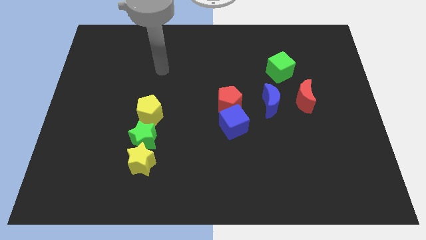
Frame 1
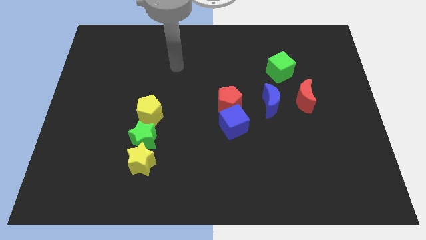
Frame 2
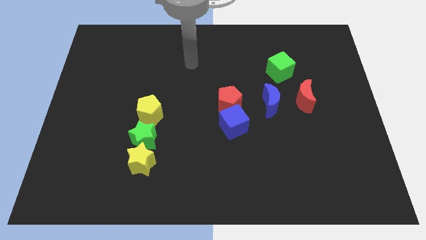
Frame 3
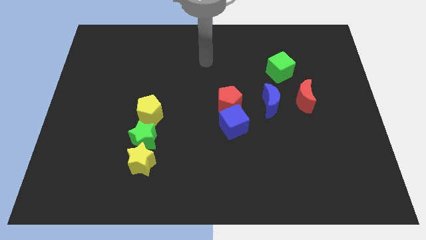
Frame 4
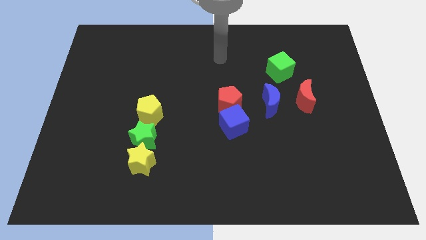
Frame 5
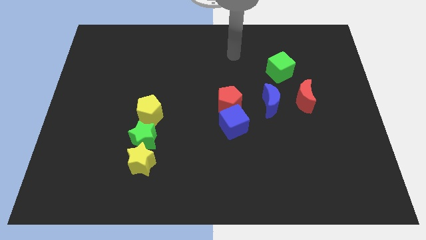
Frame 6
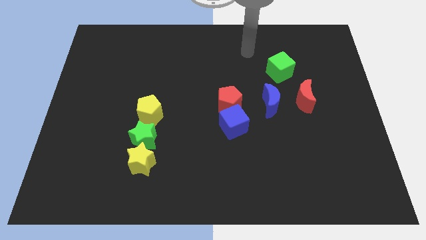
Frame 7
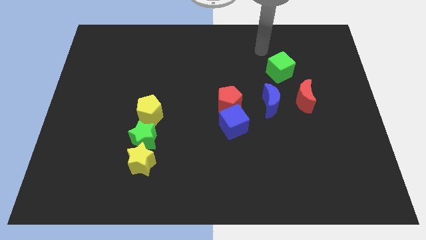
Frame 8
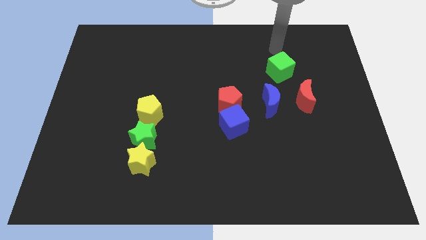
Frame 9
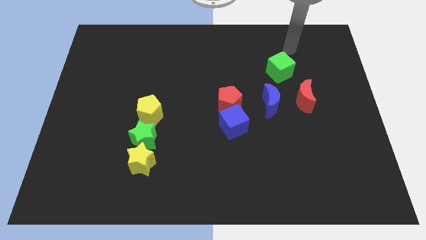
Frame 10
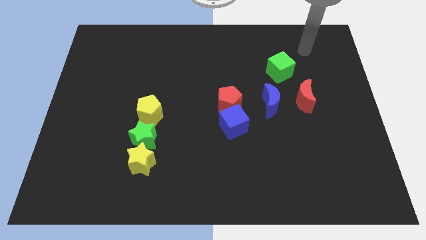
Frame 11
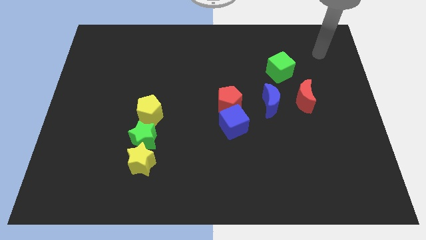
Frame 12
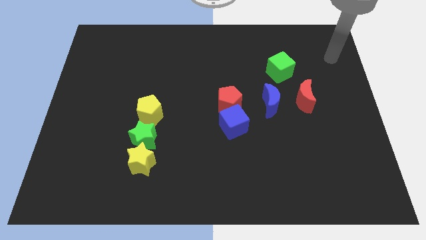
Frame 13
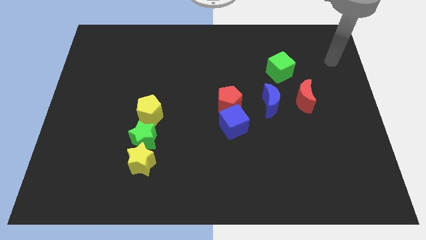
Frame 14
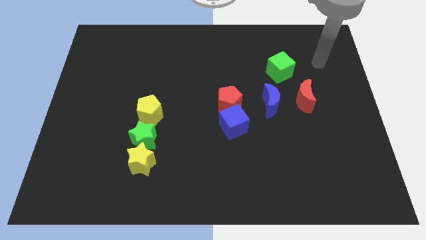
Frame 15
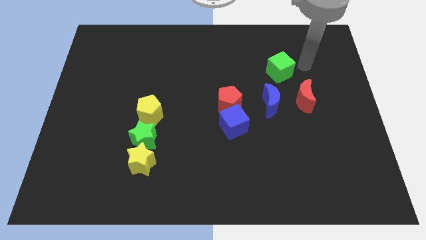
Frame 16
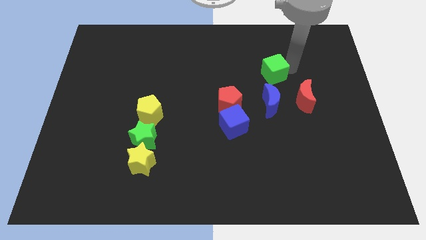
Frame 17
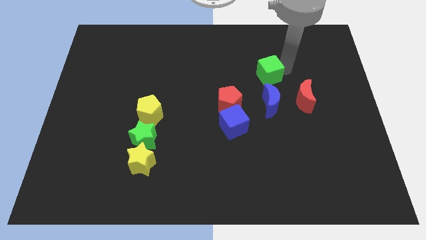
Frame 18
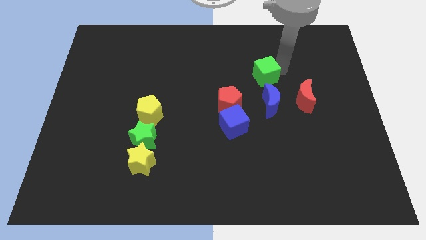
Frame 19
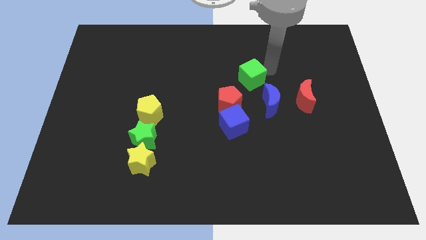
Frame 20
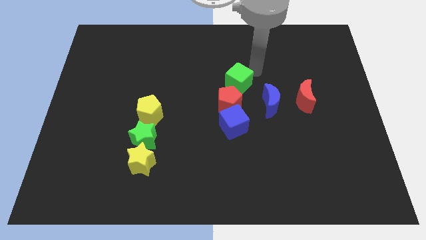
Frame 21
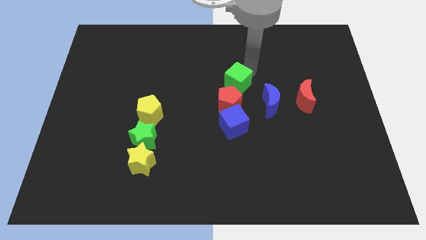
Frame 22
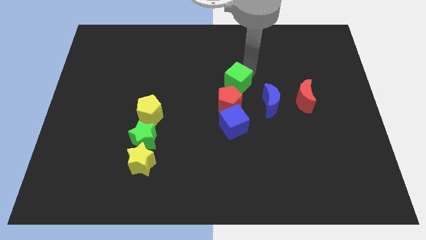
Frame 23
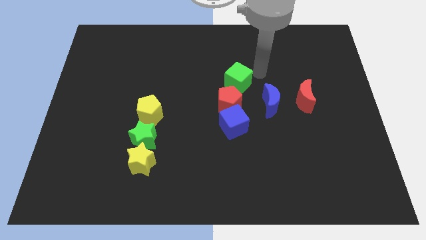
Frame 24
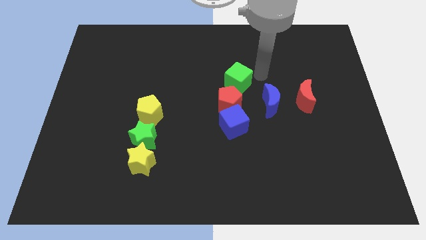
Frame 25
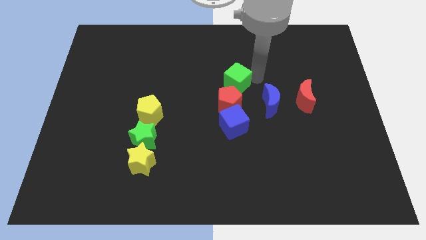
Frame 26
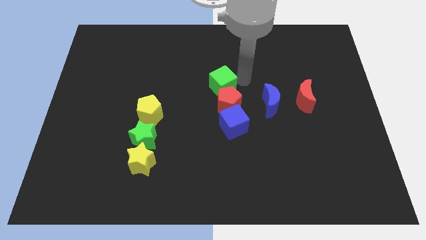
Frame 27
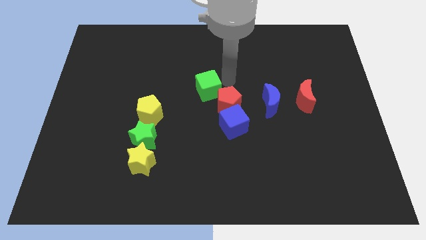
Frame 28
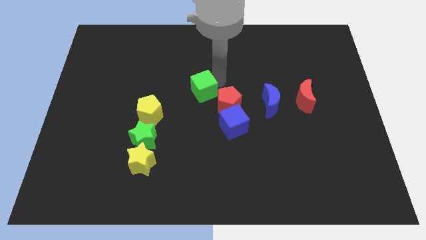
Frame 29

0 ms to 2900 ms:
push the green cube to the center of the board

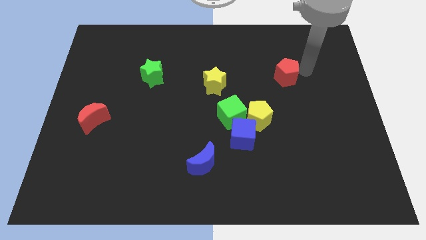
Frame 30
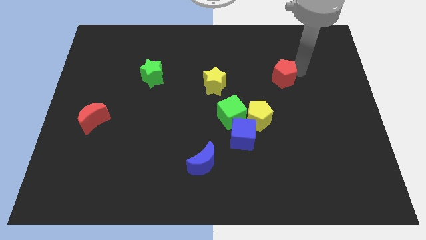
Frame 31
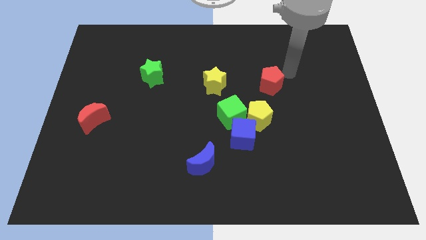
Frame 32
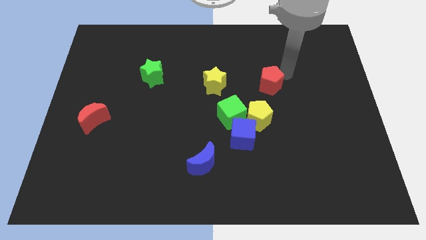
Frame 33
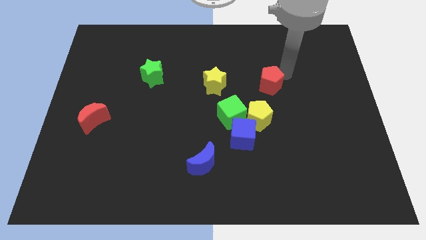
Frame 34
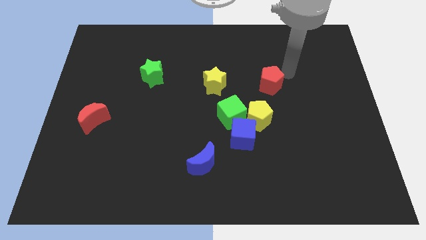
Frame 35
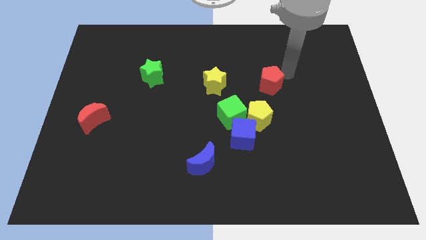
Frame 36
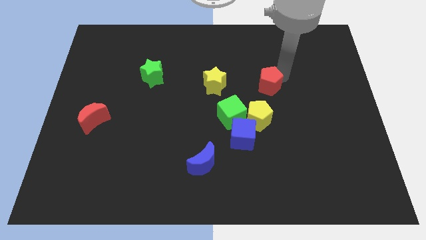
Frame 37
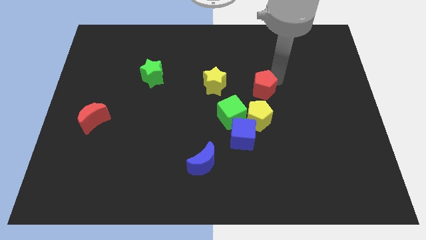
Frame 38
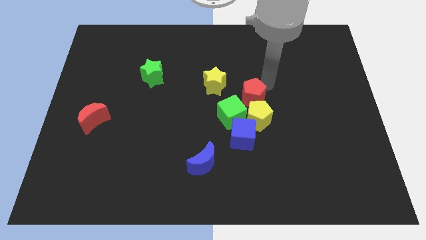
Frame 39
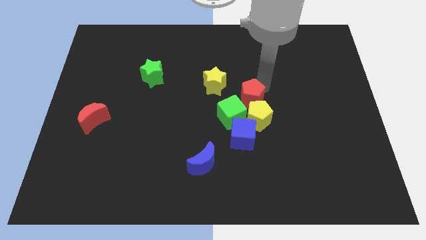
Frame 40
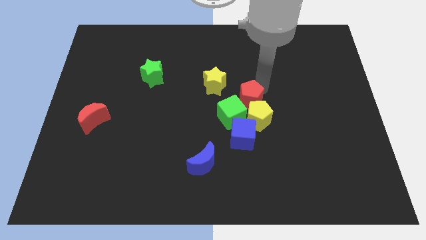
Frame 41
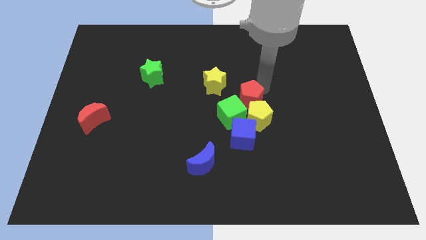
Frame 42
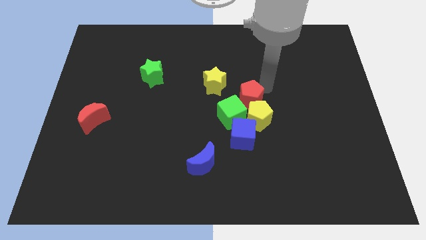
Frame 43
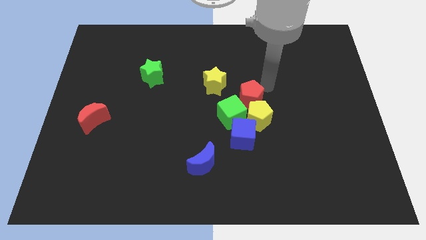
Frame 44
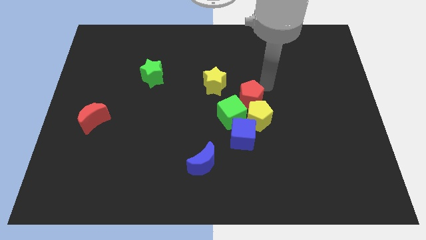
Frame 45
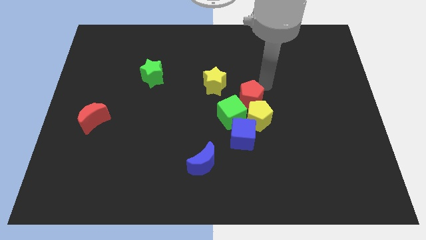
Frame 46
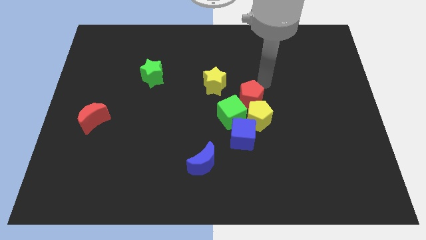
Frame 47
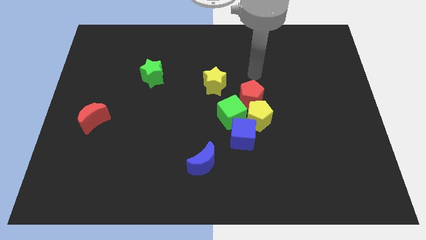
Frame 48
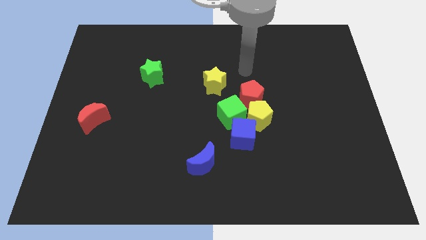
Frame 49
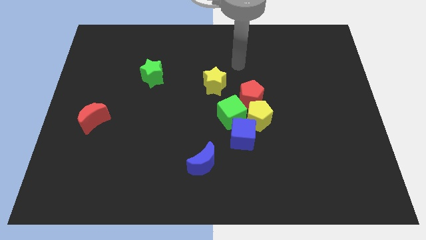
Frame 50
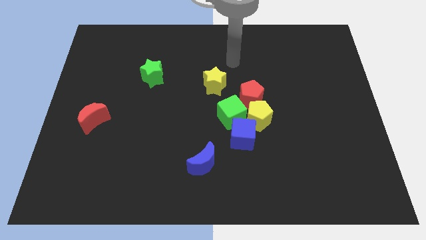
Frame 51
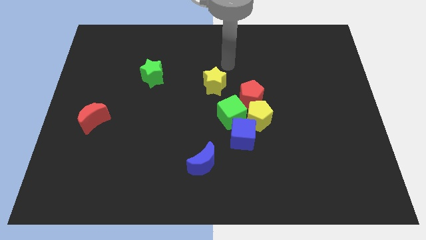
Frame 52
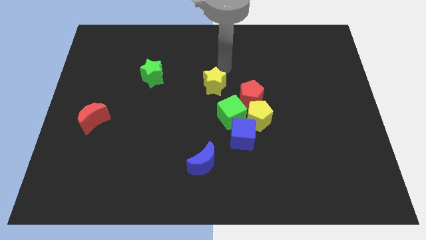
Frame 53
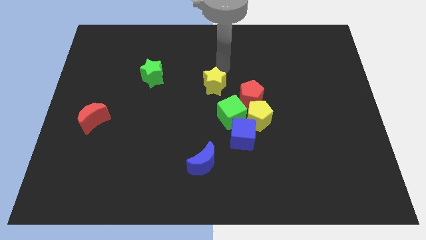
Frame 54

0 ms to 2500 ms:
push the red pentagon towards the yellow pentagon

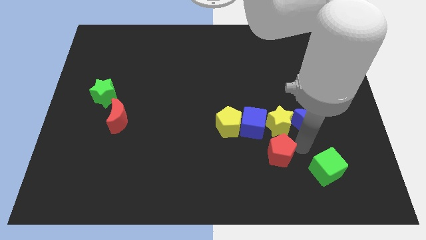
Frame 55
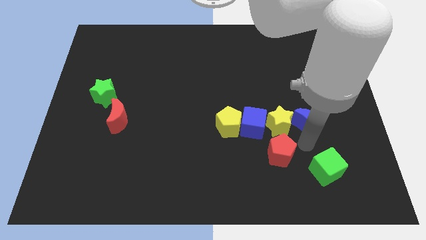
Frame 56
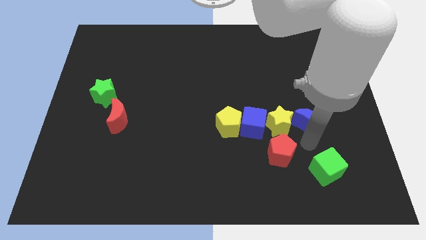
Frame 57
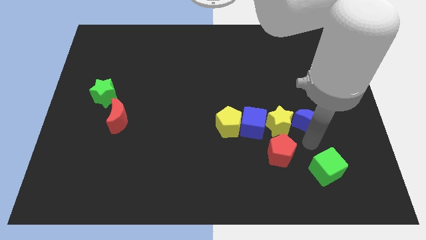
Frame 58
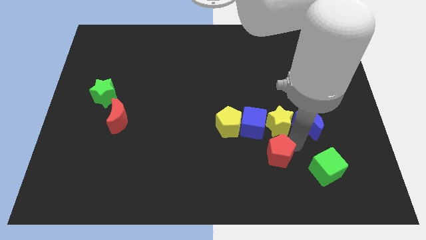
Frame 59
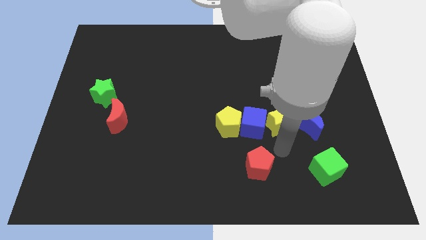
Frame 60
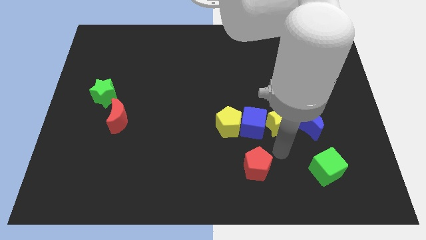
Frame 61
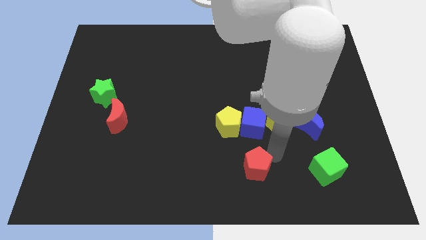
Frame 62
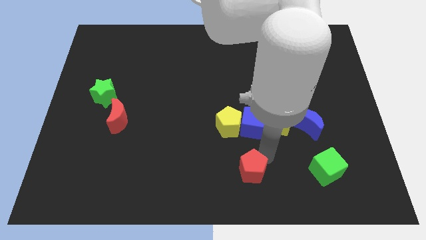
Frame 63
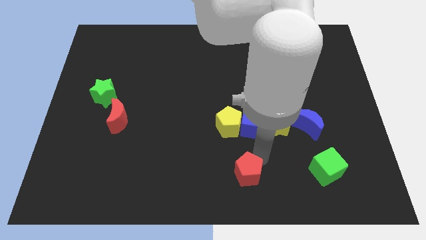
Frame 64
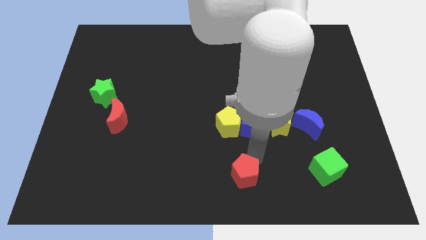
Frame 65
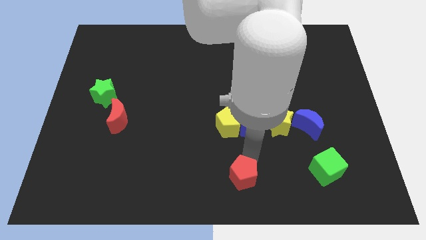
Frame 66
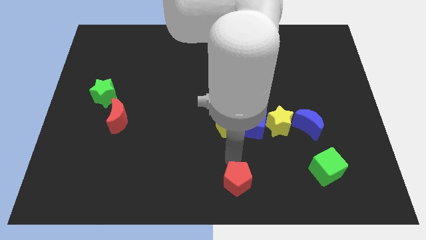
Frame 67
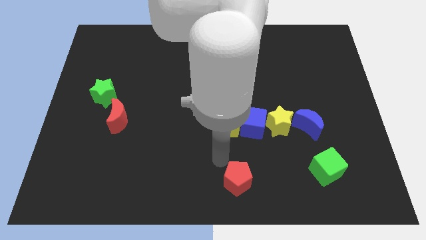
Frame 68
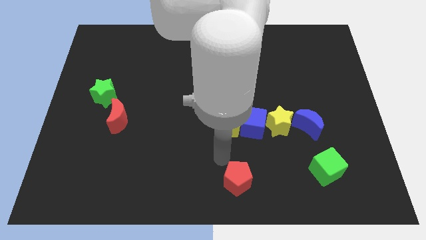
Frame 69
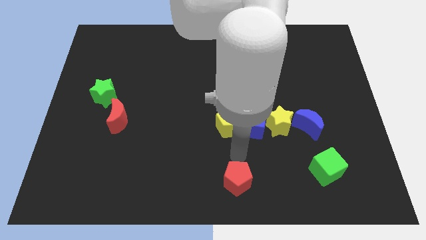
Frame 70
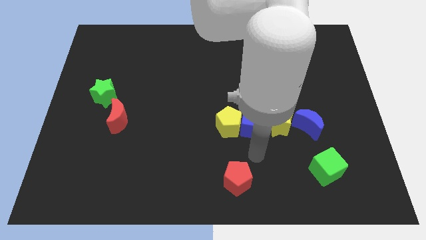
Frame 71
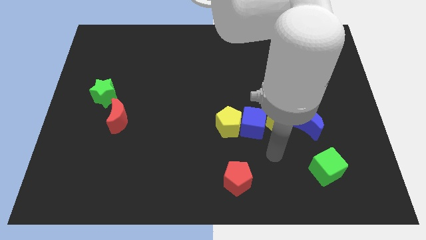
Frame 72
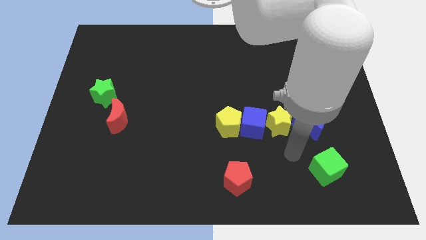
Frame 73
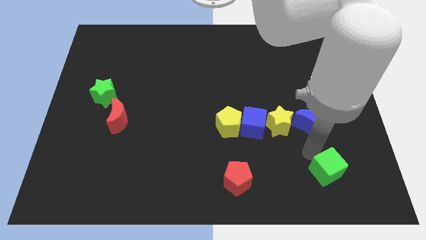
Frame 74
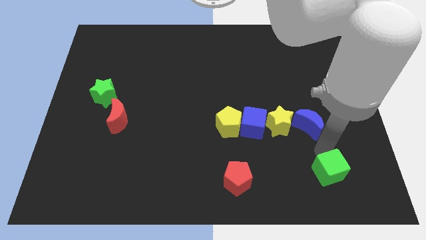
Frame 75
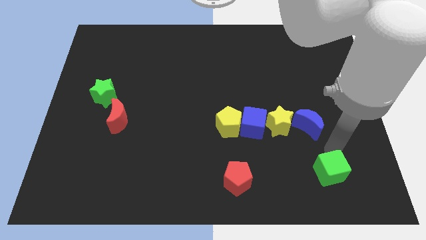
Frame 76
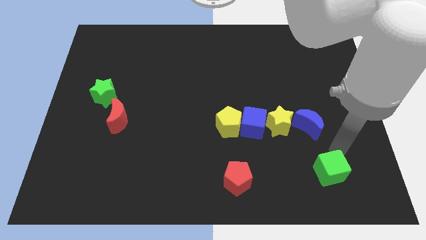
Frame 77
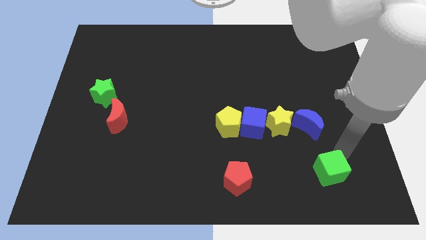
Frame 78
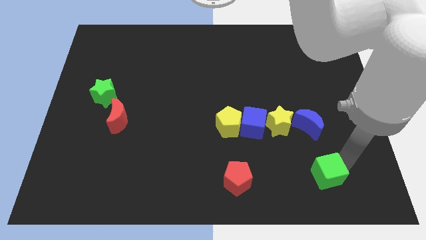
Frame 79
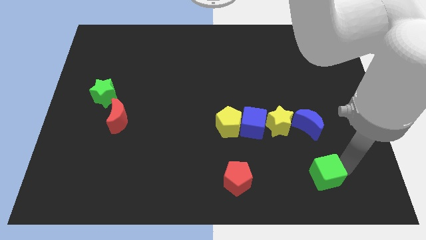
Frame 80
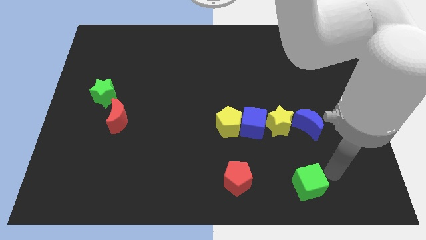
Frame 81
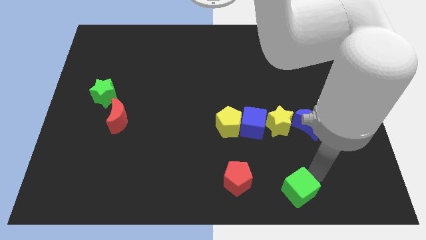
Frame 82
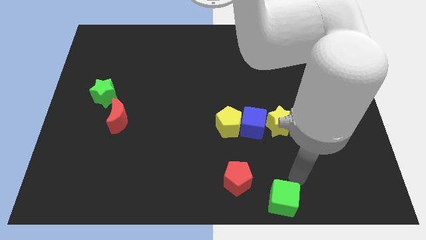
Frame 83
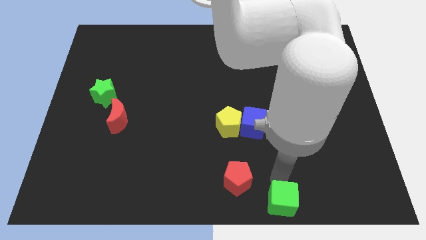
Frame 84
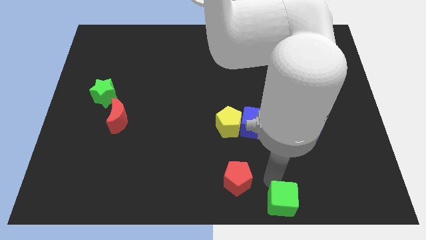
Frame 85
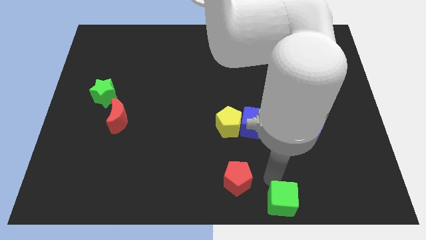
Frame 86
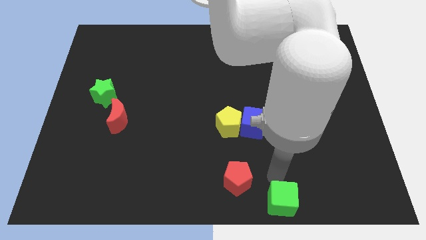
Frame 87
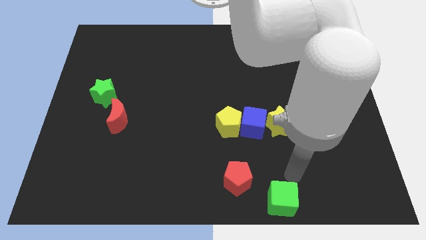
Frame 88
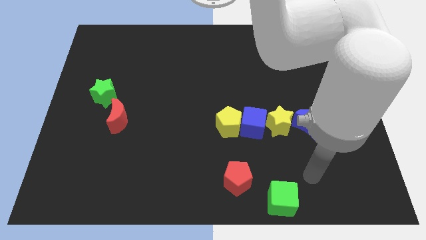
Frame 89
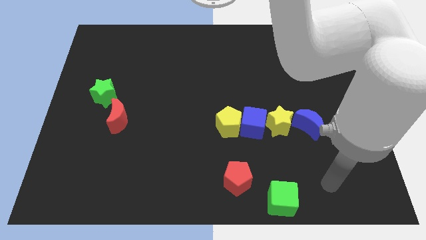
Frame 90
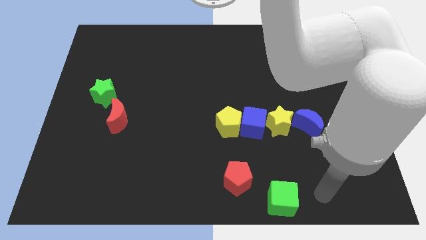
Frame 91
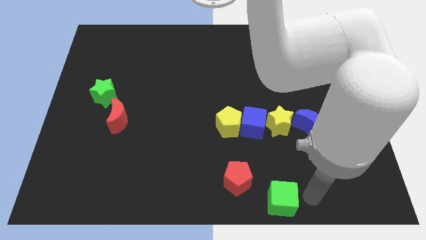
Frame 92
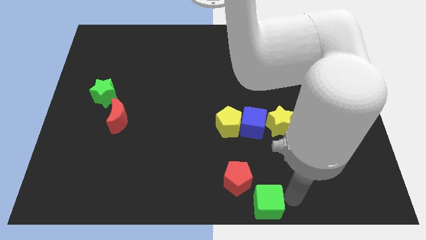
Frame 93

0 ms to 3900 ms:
move the red pentagon and green cube towards the bottom side of the board
